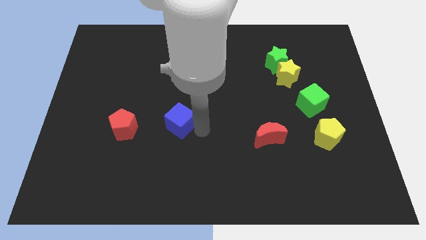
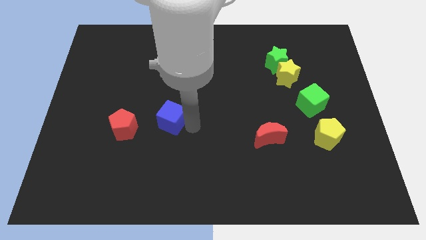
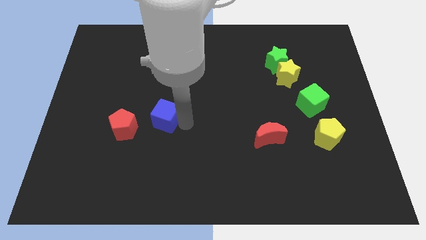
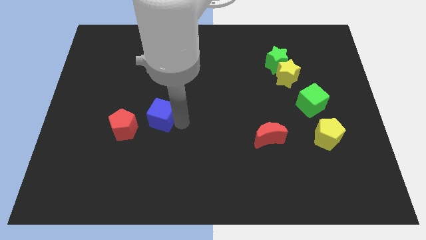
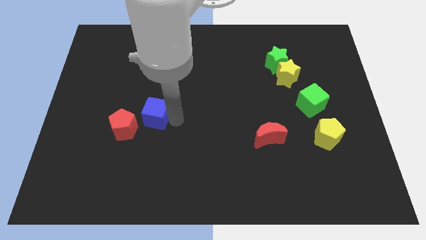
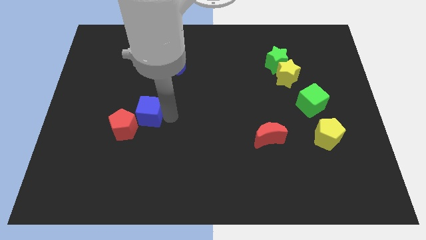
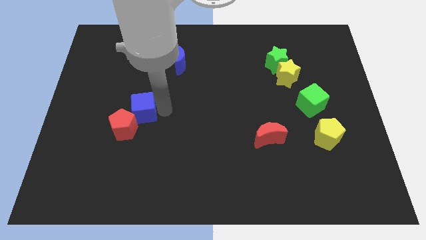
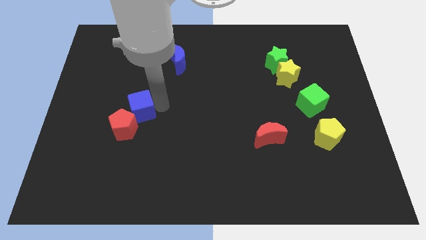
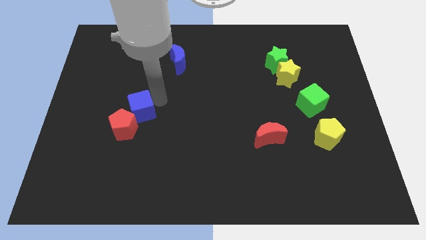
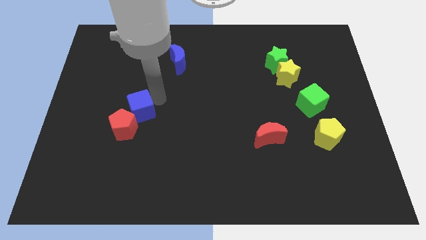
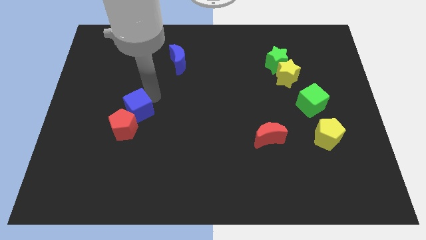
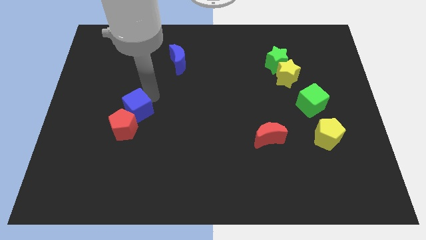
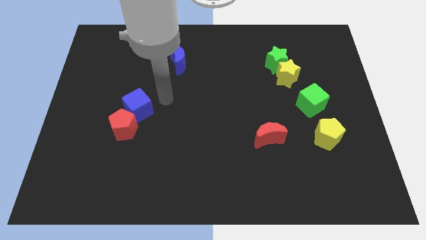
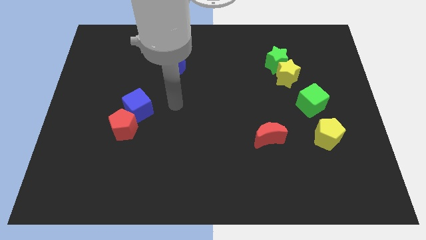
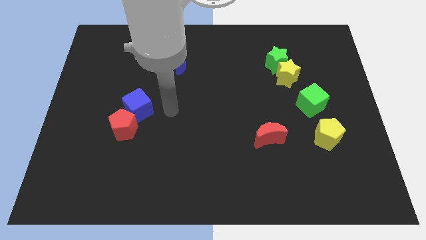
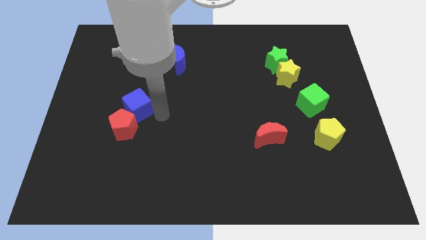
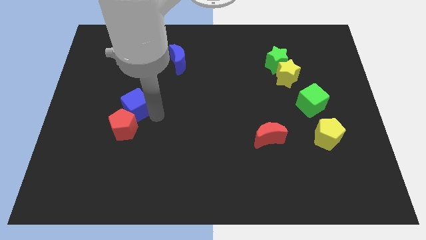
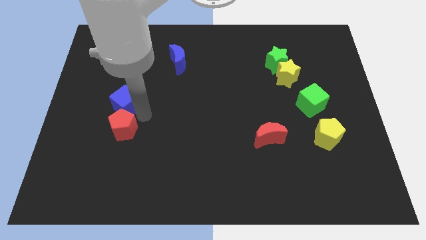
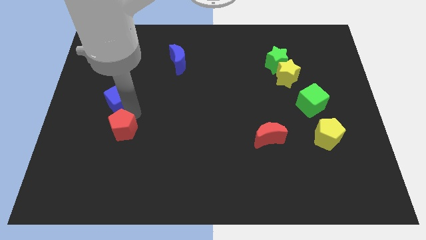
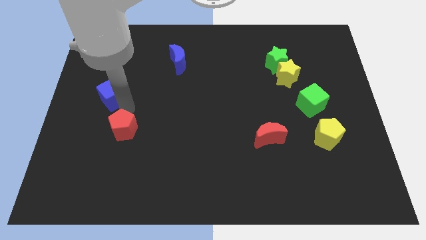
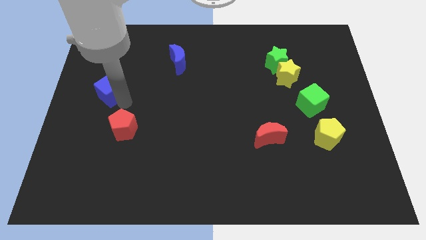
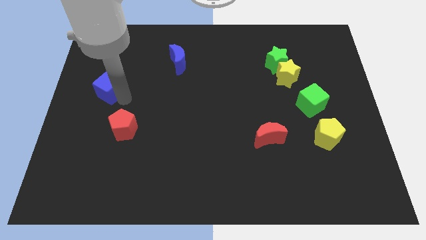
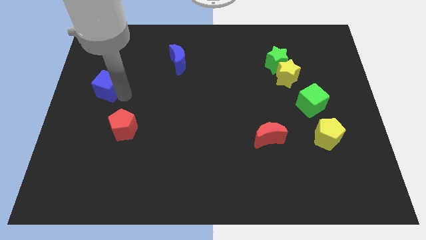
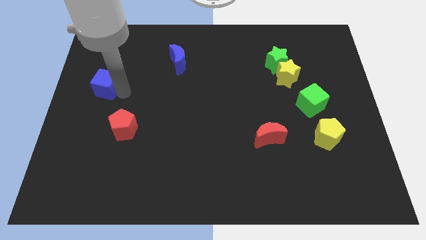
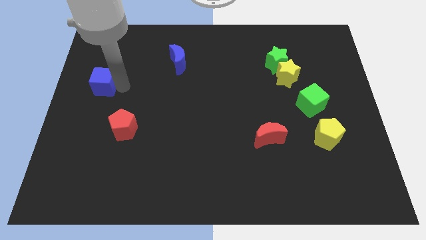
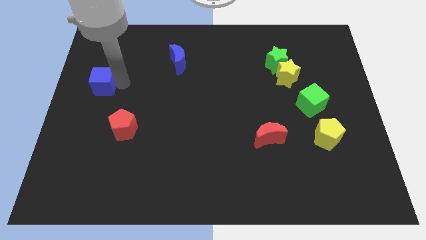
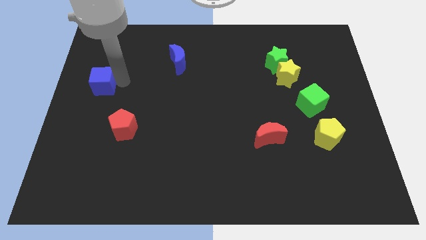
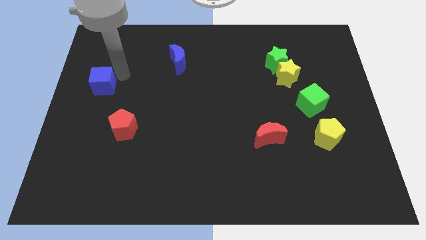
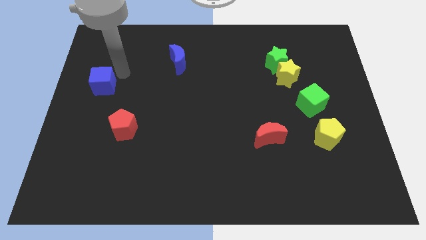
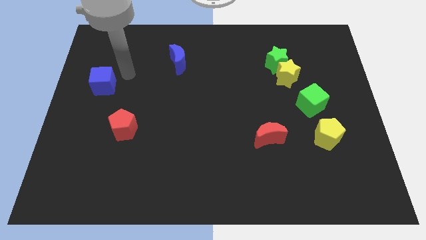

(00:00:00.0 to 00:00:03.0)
push blue cube above red crescent

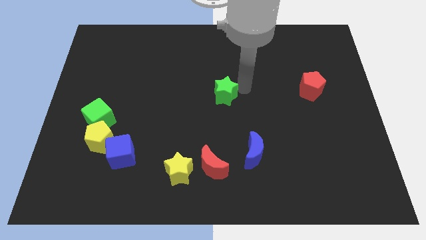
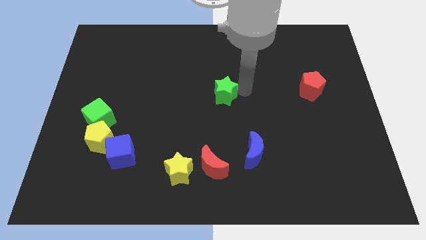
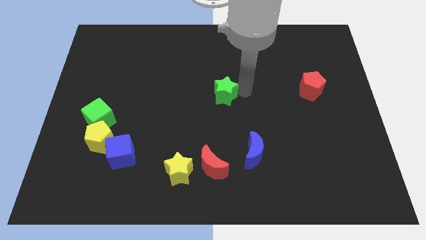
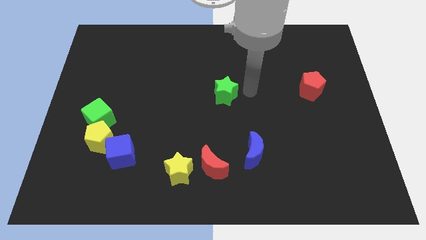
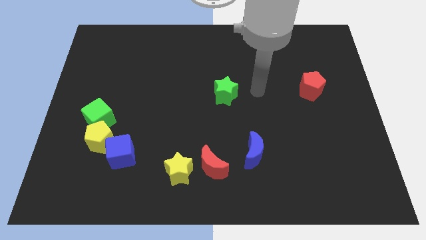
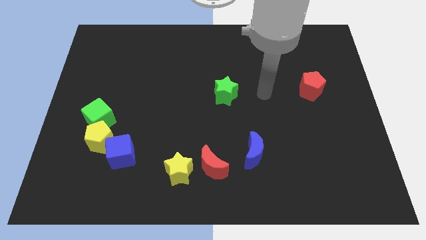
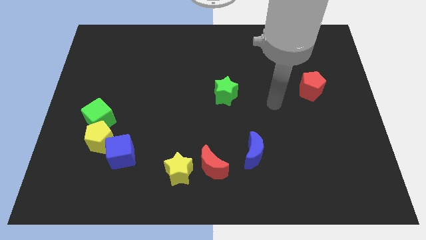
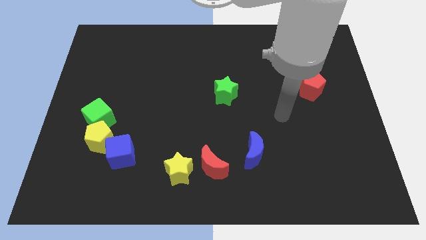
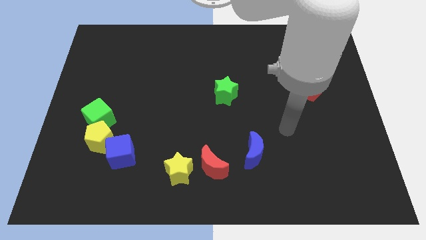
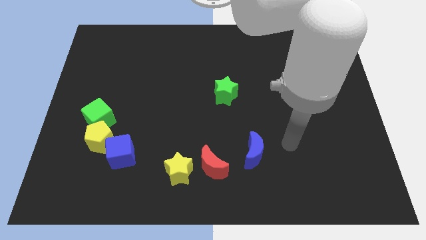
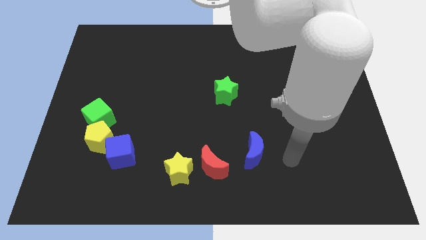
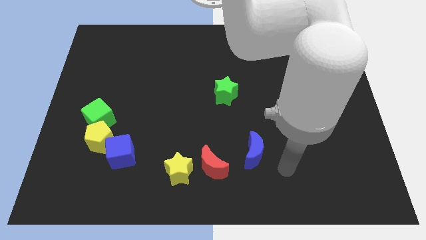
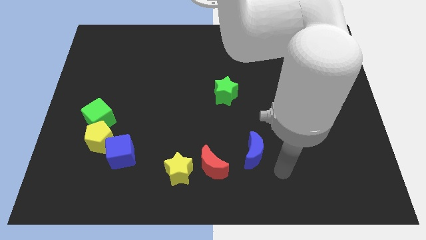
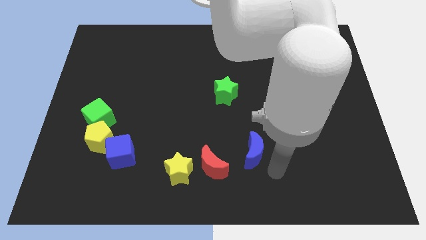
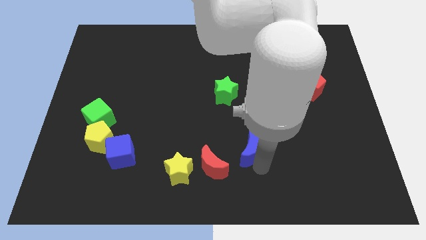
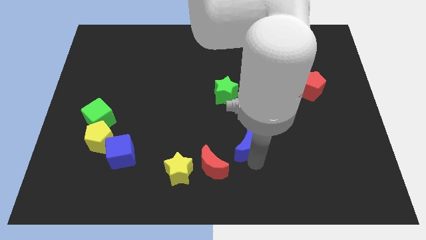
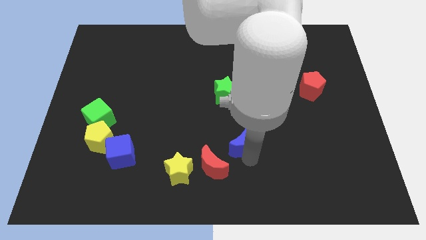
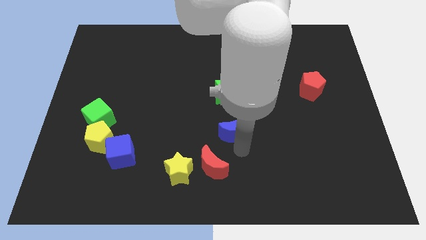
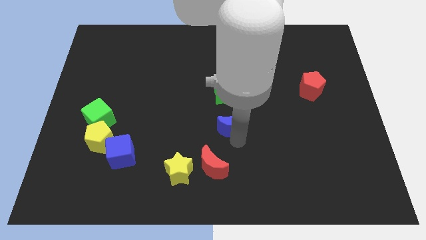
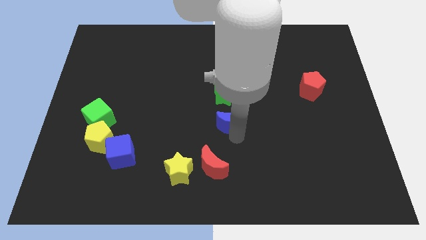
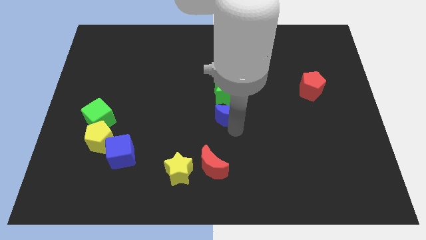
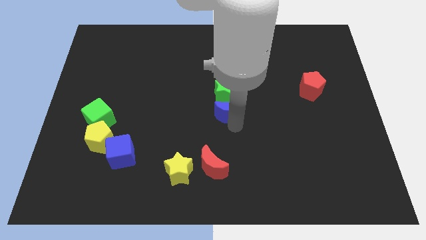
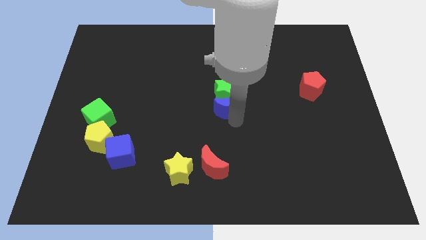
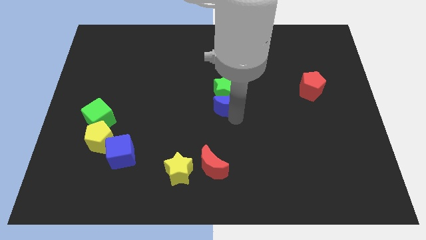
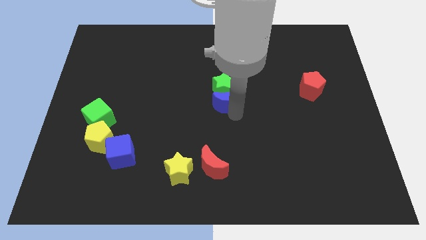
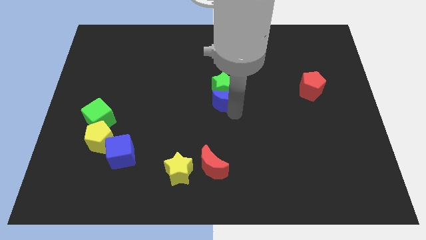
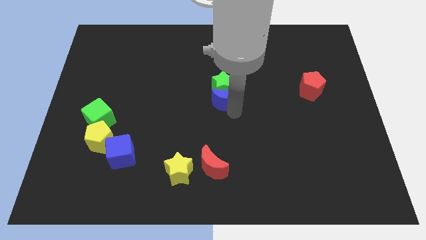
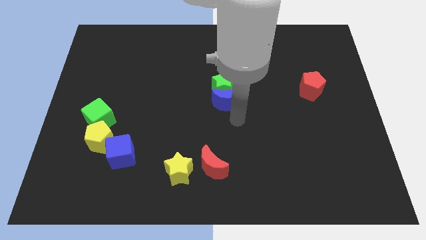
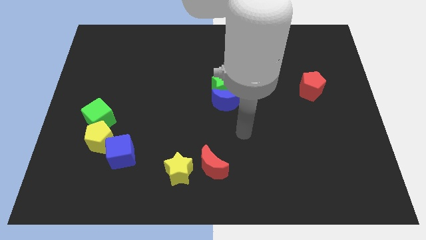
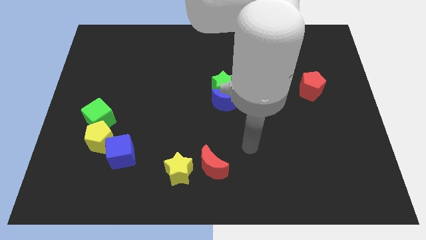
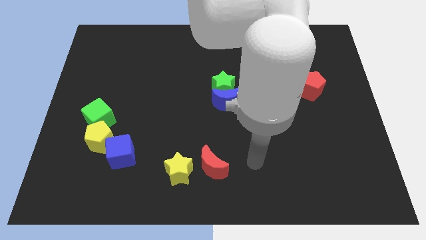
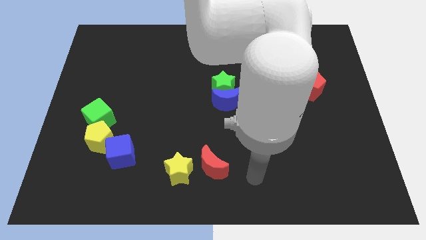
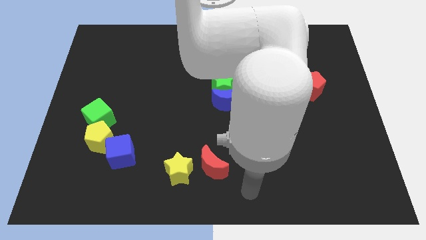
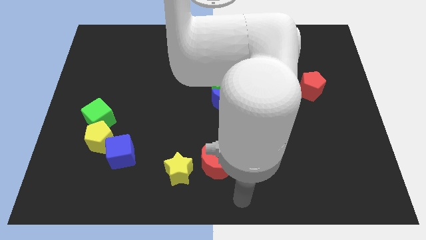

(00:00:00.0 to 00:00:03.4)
push the blue moon into the green star

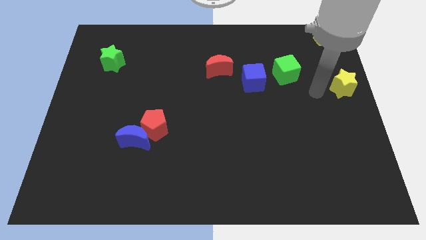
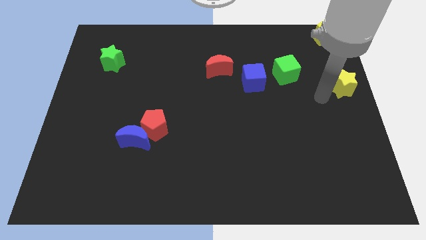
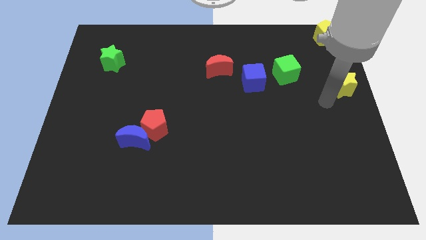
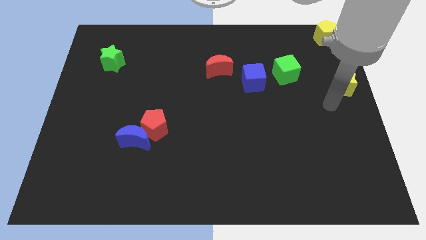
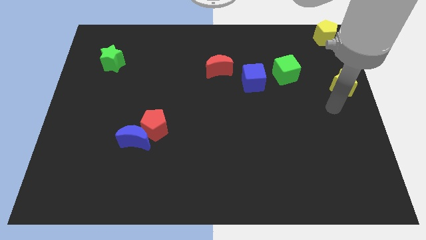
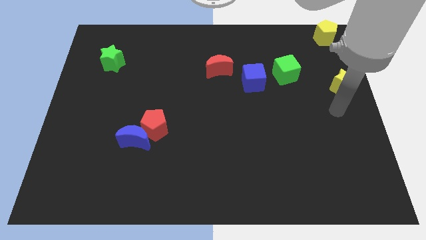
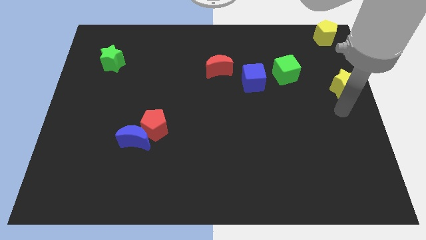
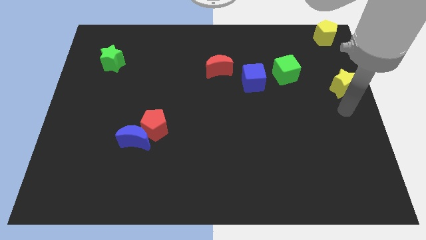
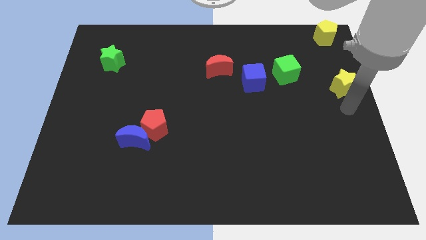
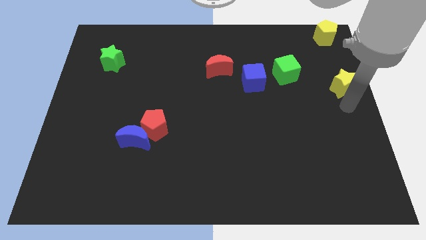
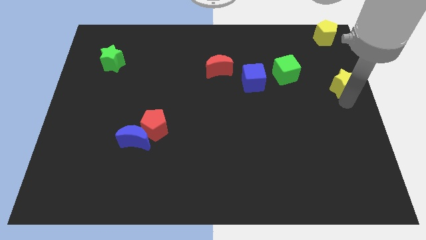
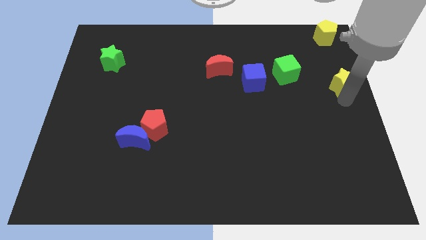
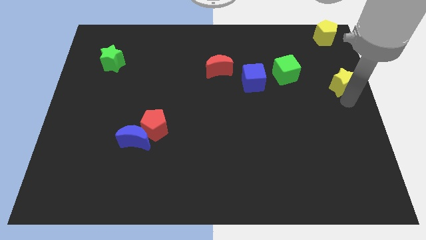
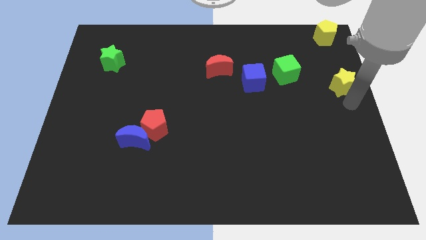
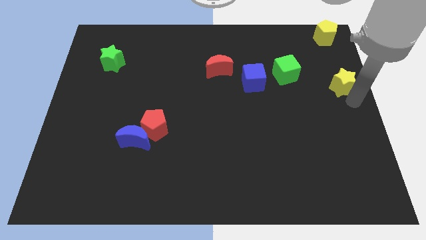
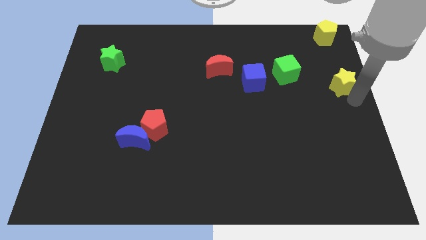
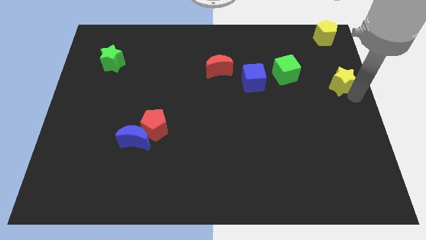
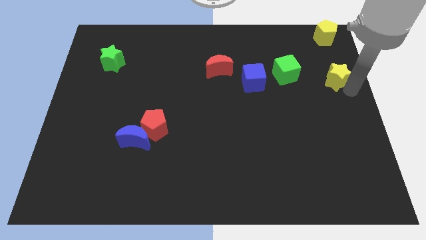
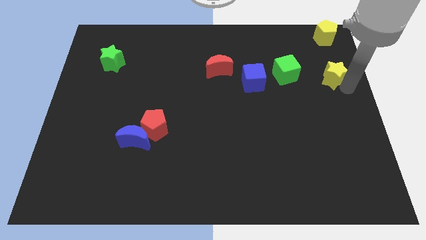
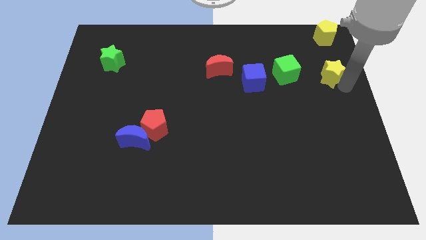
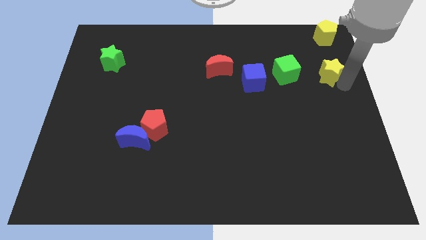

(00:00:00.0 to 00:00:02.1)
put the yellow star to the right of the green cube

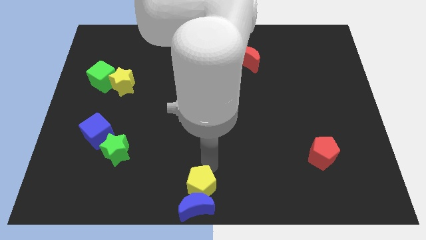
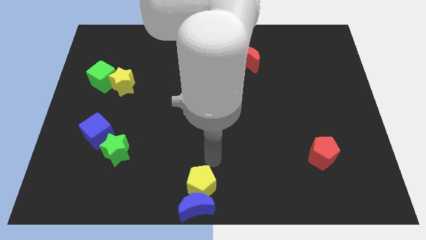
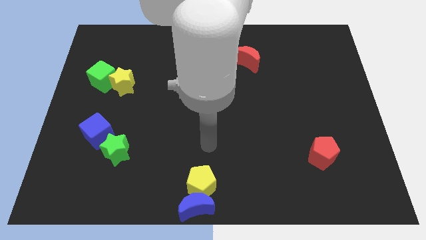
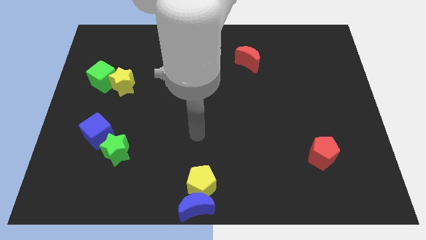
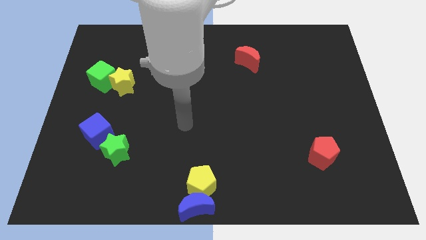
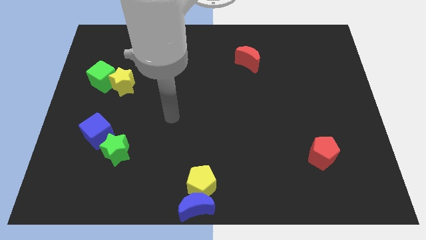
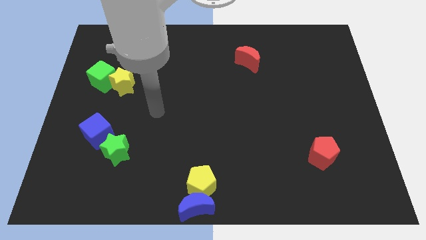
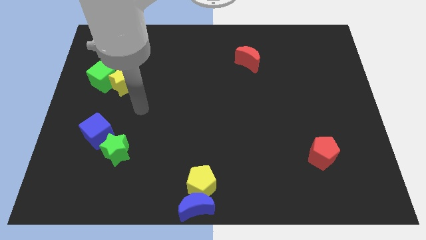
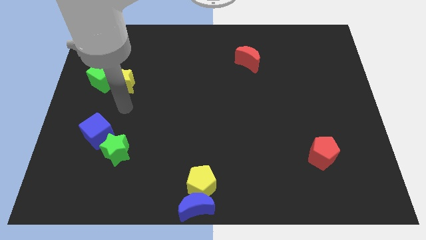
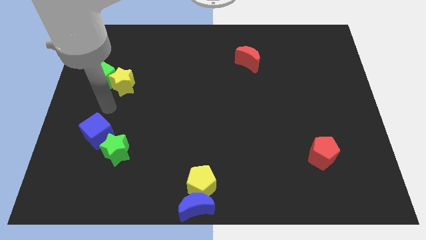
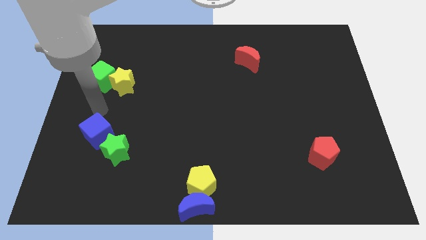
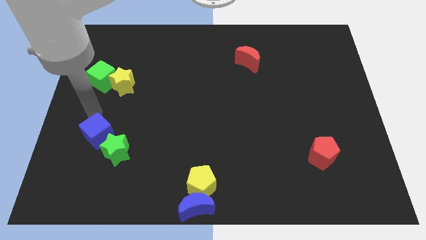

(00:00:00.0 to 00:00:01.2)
point your arm at the top of the blue cube
